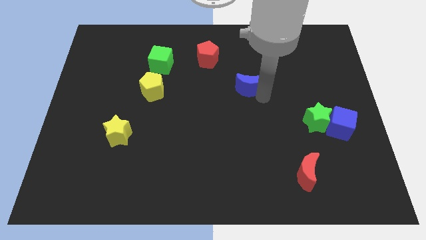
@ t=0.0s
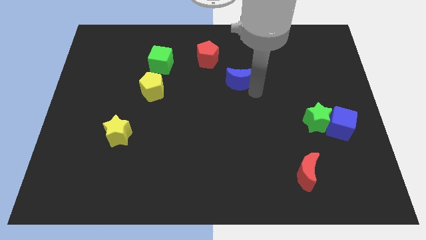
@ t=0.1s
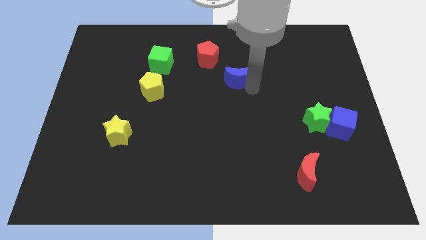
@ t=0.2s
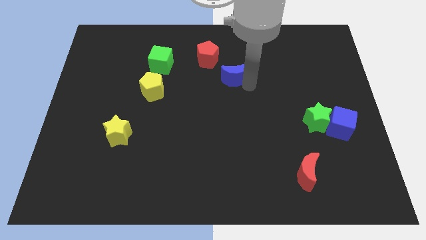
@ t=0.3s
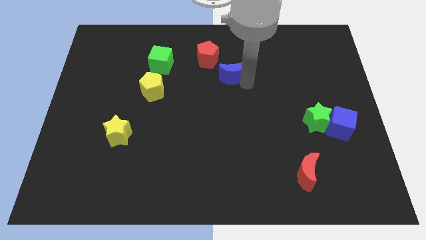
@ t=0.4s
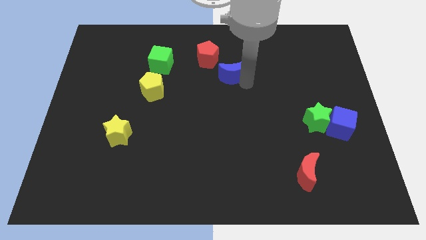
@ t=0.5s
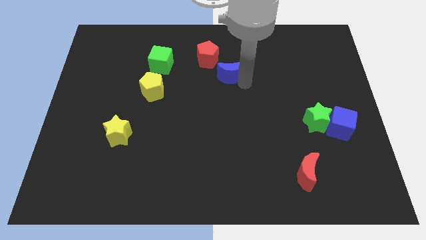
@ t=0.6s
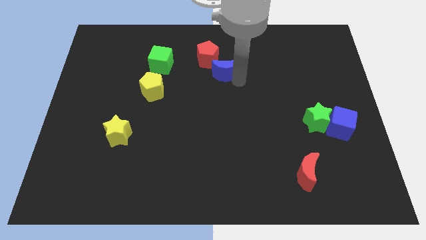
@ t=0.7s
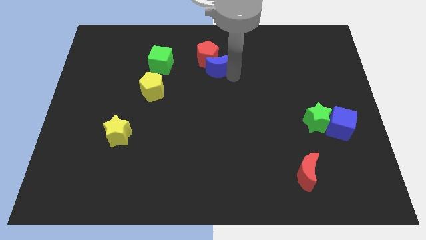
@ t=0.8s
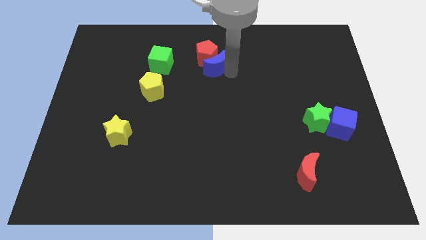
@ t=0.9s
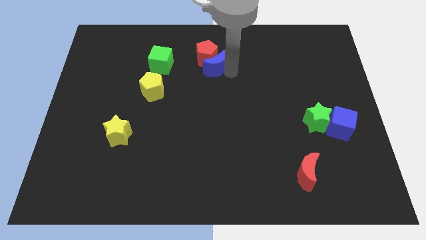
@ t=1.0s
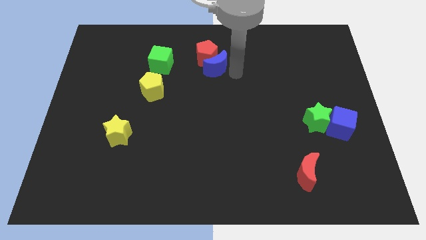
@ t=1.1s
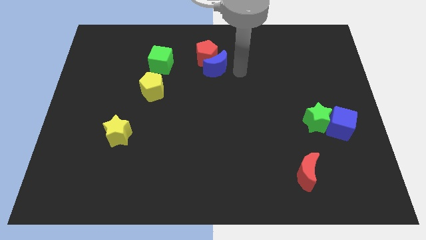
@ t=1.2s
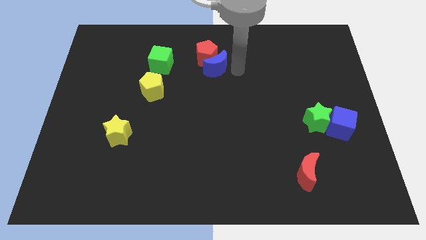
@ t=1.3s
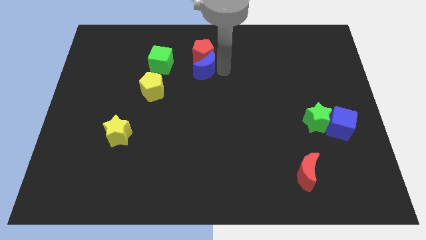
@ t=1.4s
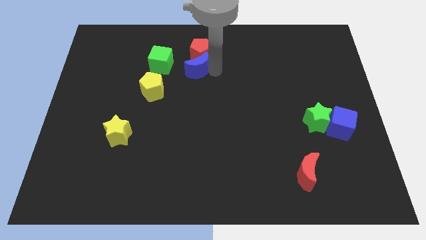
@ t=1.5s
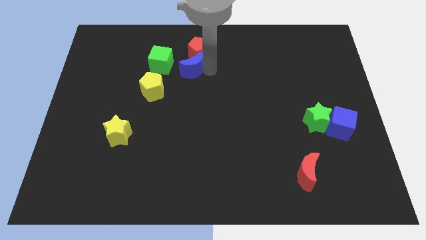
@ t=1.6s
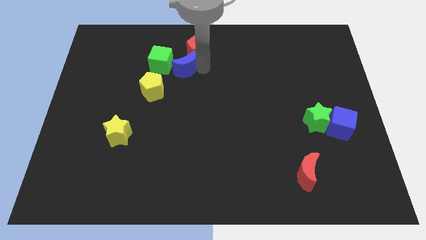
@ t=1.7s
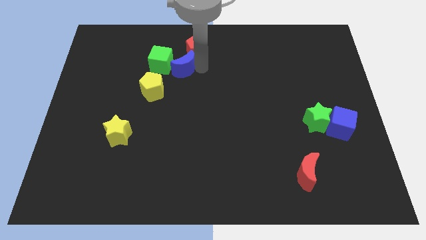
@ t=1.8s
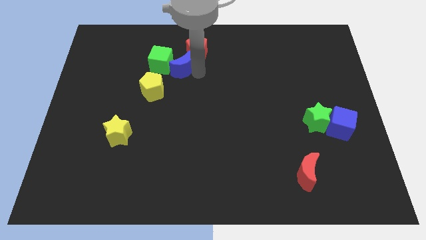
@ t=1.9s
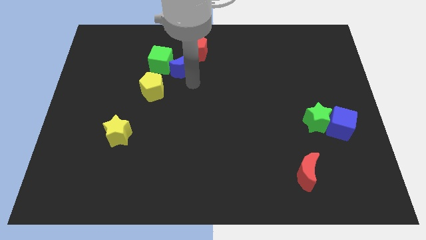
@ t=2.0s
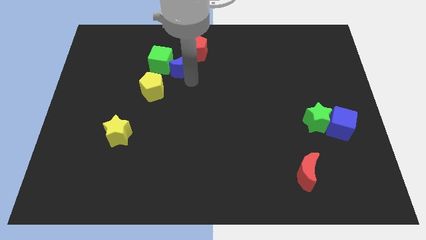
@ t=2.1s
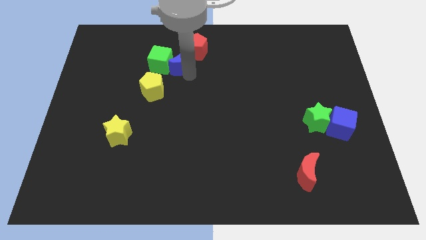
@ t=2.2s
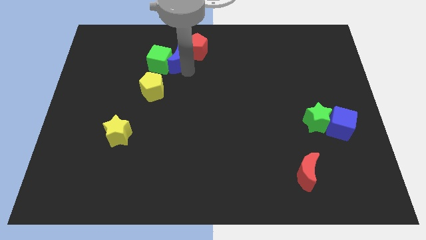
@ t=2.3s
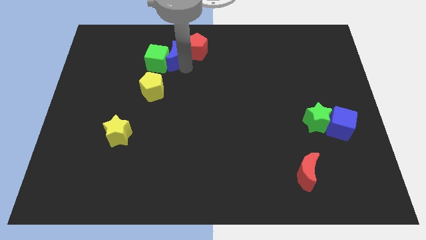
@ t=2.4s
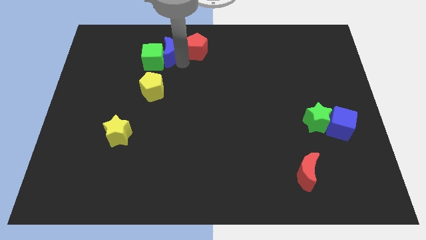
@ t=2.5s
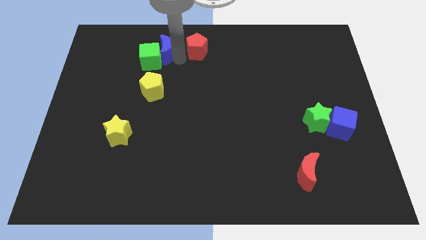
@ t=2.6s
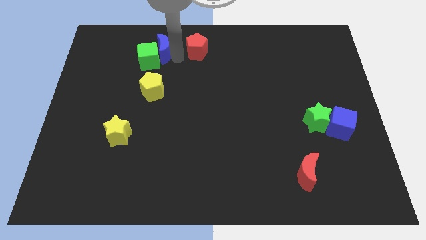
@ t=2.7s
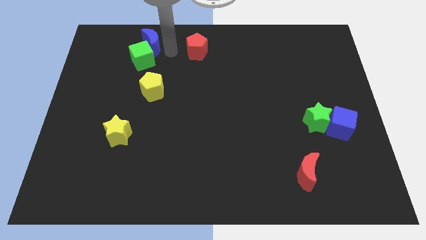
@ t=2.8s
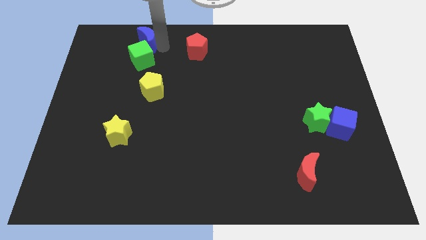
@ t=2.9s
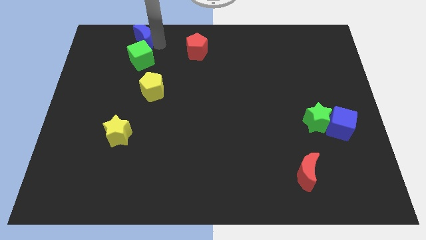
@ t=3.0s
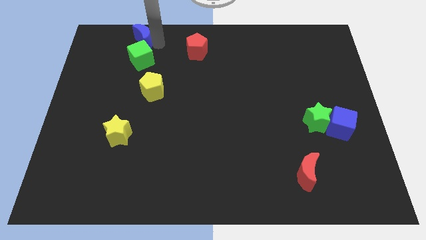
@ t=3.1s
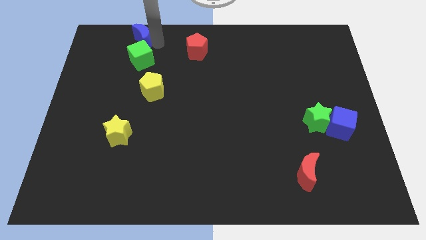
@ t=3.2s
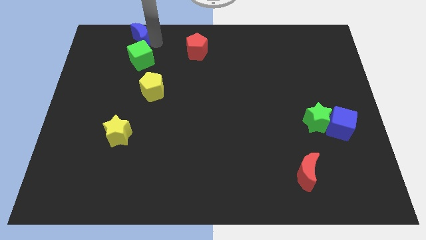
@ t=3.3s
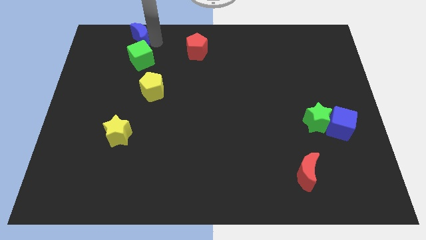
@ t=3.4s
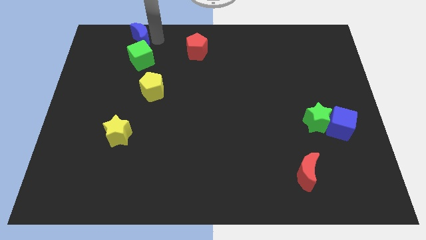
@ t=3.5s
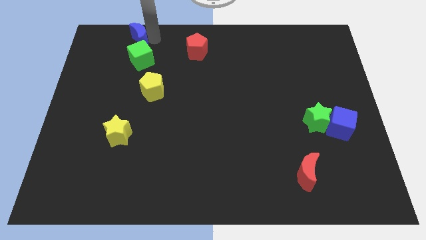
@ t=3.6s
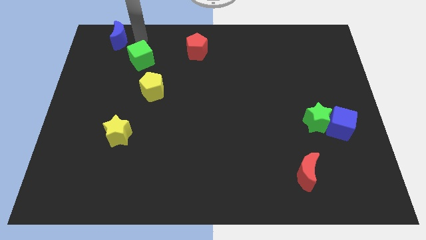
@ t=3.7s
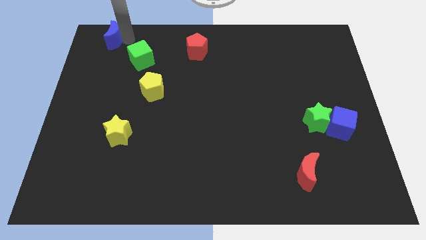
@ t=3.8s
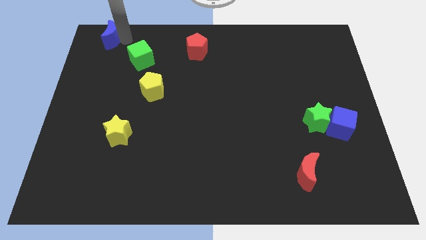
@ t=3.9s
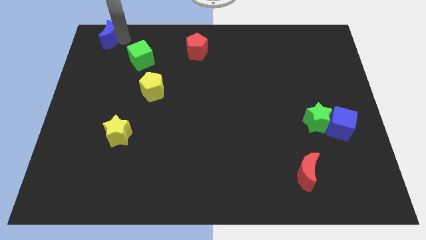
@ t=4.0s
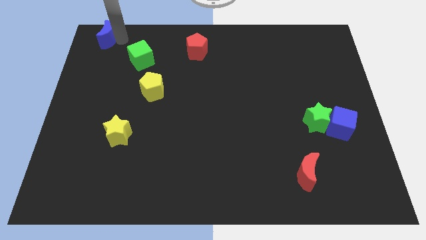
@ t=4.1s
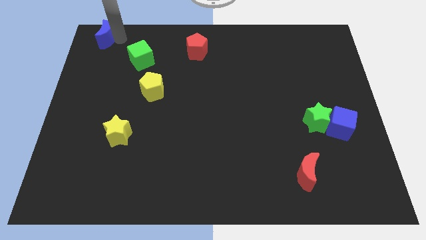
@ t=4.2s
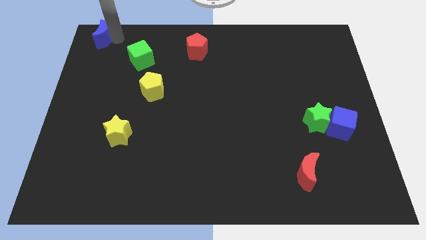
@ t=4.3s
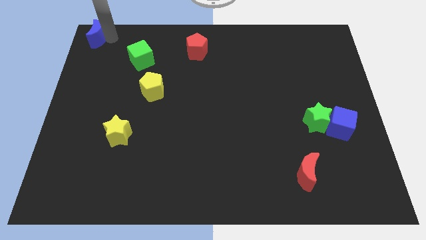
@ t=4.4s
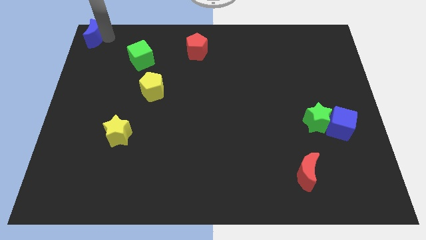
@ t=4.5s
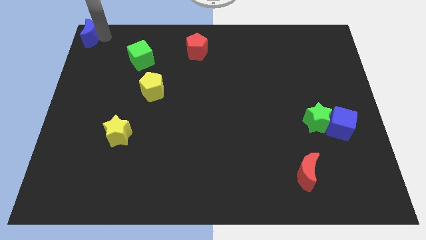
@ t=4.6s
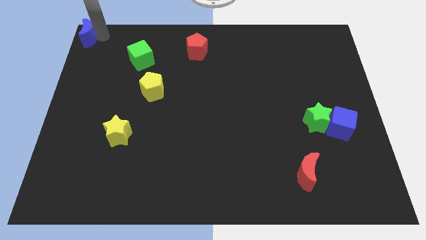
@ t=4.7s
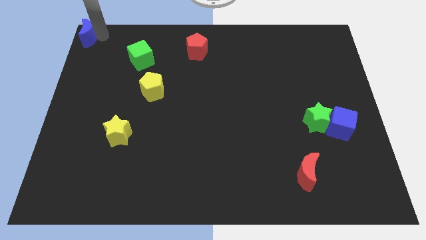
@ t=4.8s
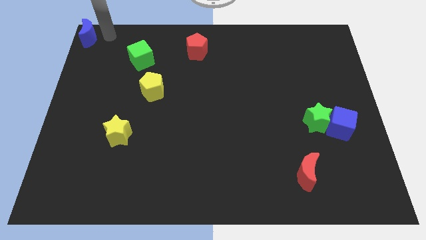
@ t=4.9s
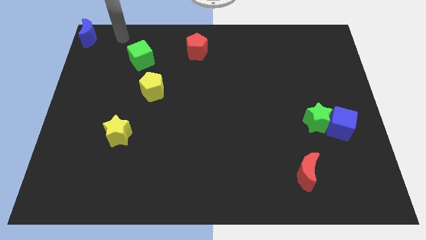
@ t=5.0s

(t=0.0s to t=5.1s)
push the blue crescent to the top left of the board

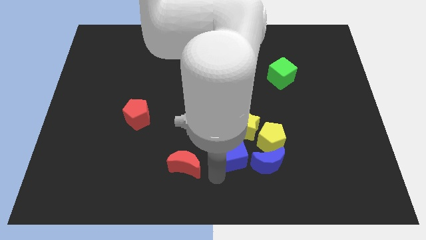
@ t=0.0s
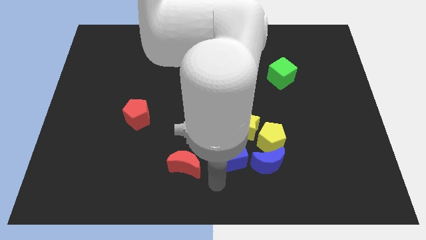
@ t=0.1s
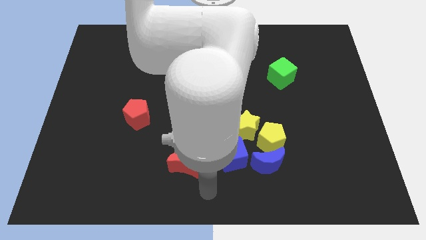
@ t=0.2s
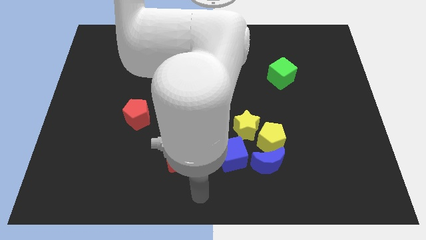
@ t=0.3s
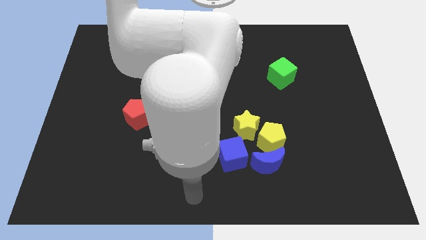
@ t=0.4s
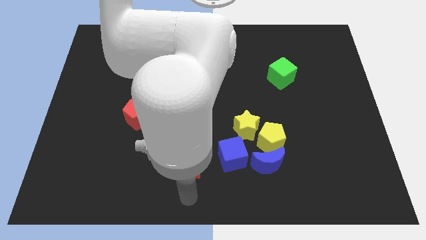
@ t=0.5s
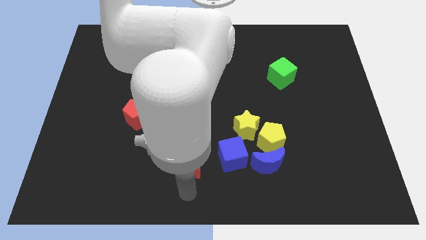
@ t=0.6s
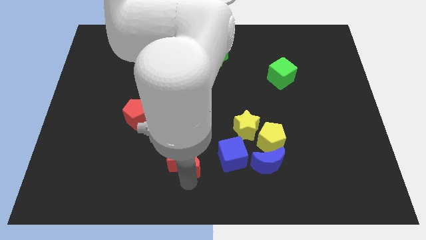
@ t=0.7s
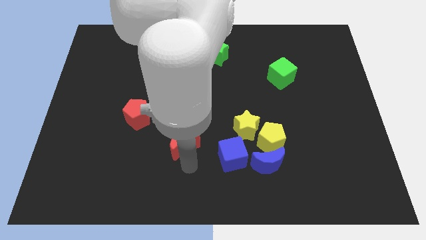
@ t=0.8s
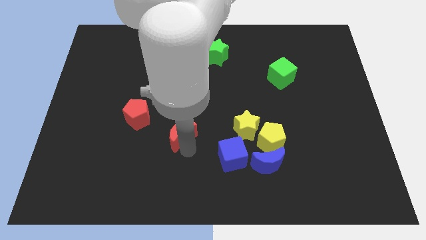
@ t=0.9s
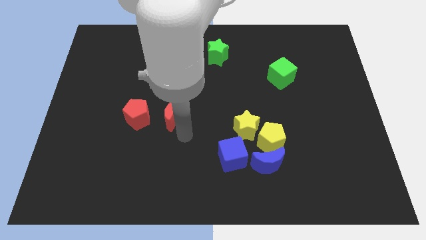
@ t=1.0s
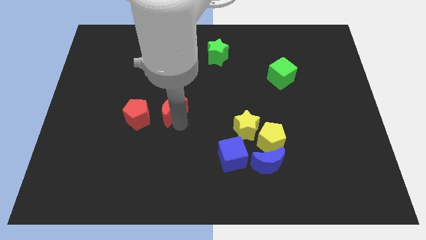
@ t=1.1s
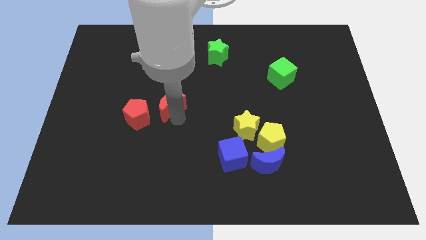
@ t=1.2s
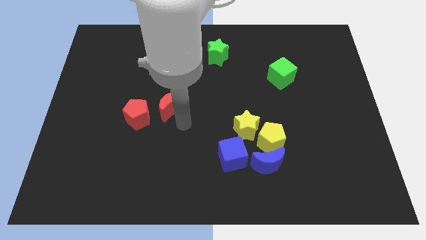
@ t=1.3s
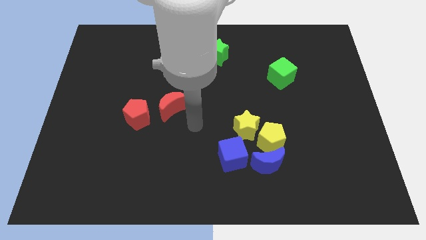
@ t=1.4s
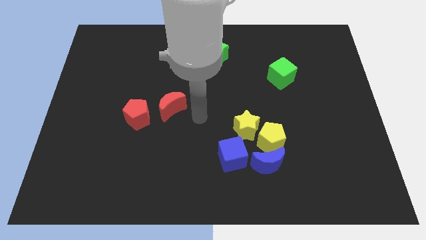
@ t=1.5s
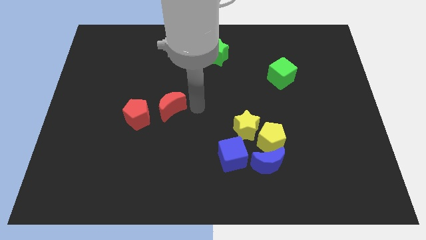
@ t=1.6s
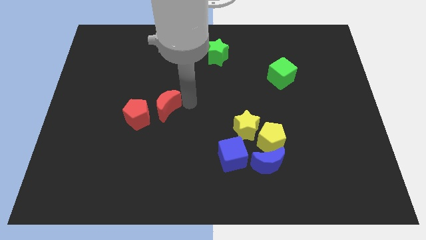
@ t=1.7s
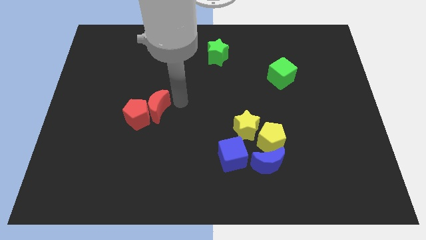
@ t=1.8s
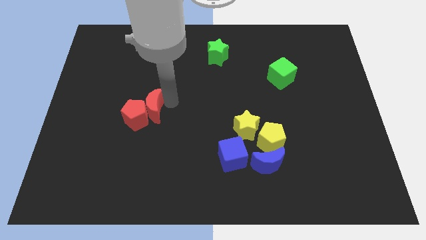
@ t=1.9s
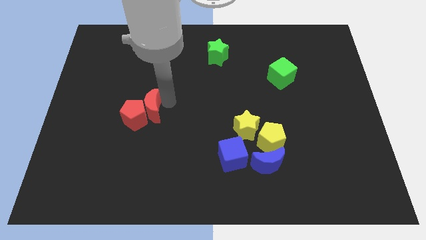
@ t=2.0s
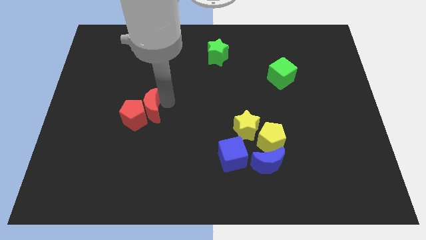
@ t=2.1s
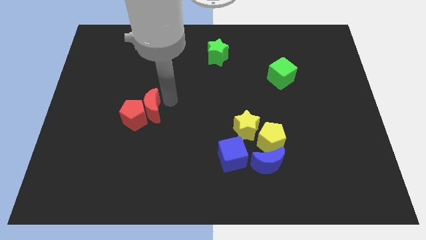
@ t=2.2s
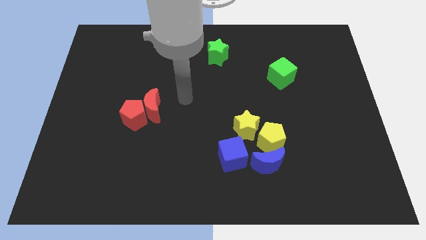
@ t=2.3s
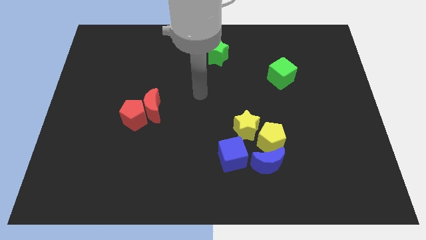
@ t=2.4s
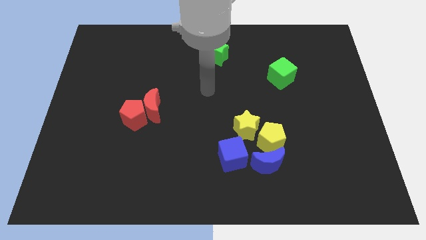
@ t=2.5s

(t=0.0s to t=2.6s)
move the red crescent right to the red pentagon

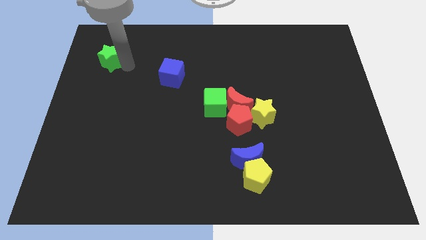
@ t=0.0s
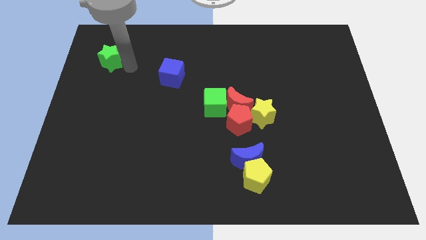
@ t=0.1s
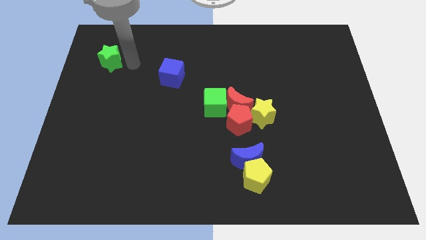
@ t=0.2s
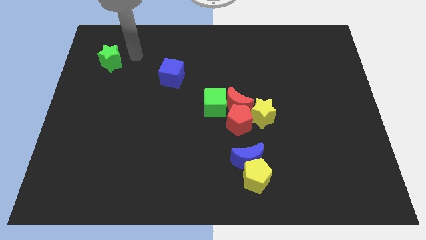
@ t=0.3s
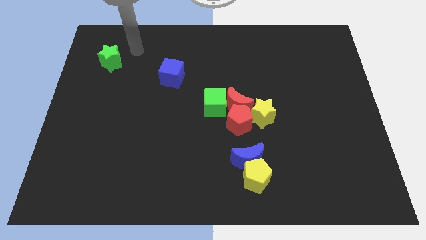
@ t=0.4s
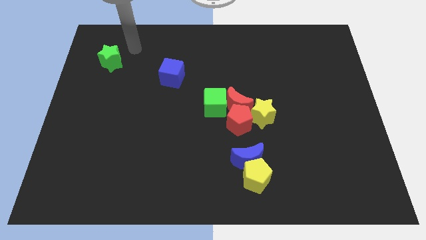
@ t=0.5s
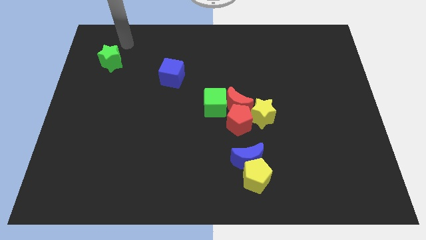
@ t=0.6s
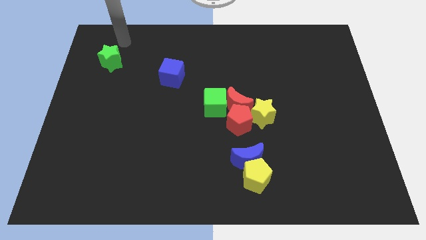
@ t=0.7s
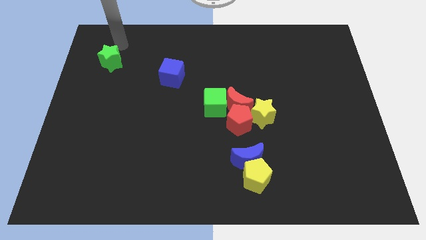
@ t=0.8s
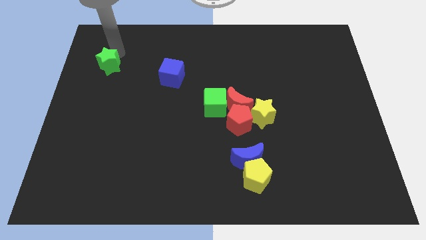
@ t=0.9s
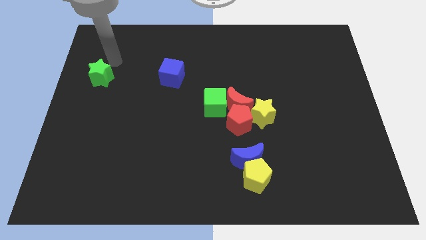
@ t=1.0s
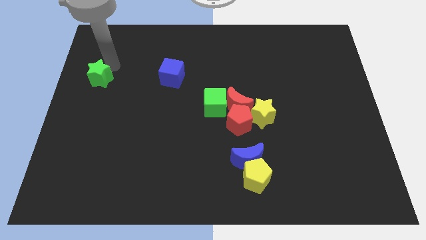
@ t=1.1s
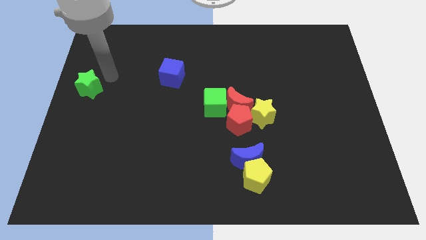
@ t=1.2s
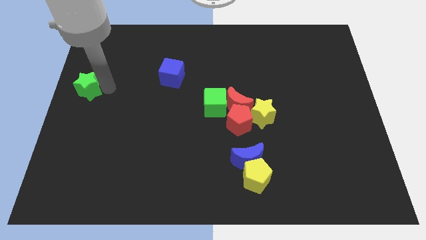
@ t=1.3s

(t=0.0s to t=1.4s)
push the green star slightly to the bottom
